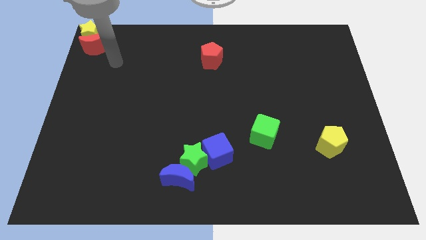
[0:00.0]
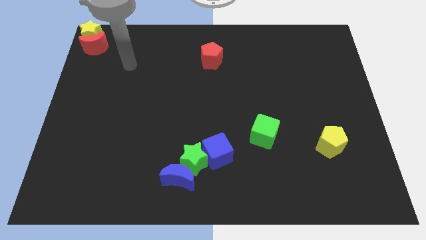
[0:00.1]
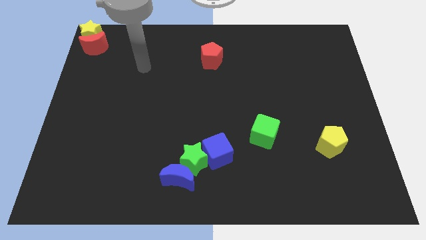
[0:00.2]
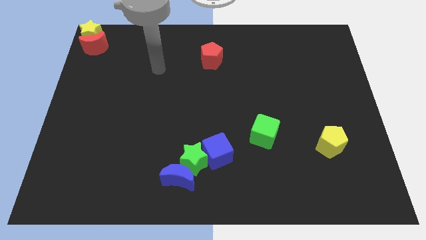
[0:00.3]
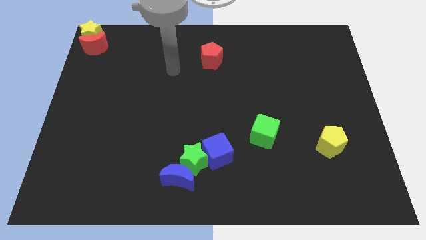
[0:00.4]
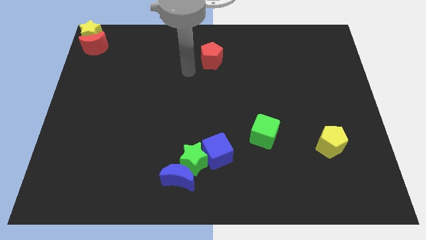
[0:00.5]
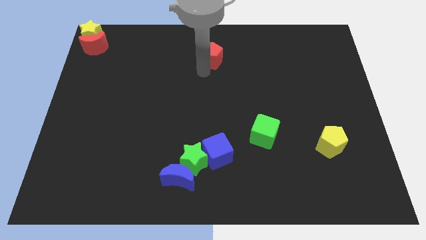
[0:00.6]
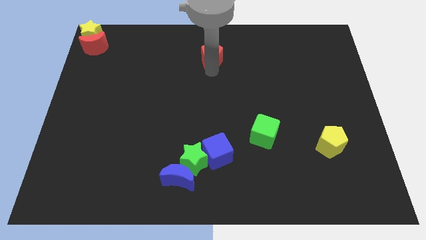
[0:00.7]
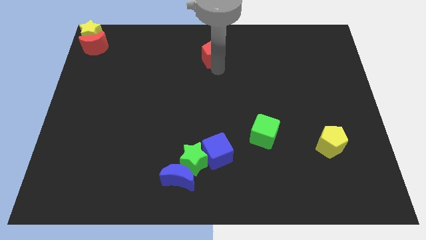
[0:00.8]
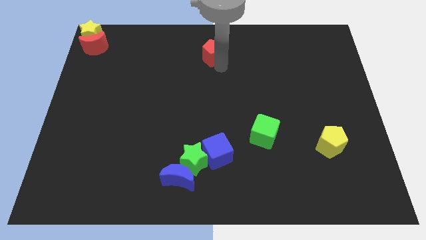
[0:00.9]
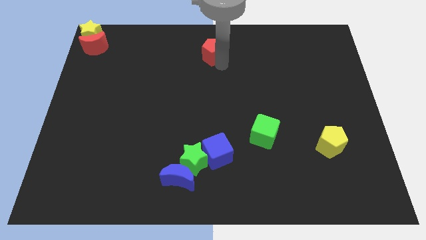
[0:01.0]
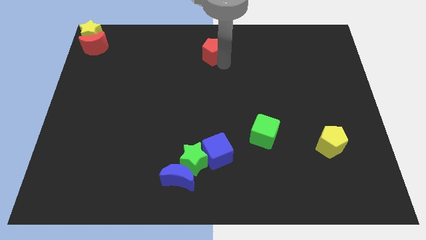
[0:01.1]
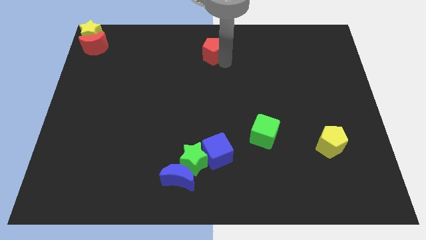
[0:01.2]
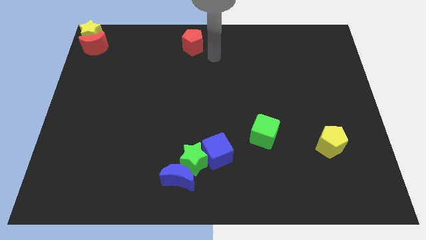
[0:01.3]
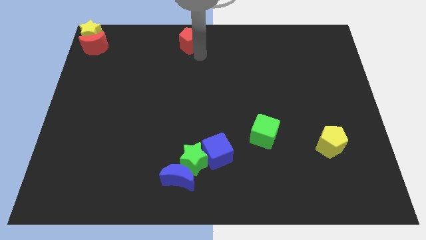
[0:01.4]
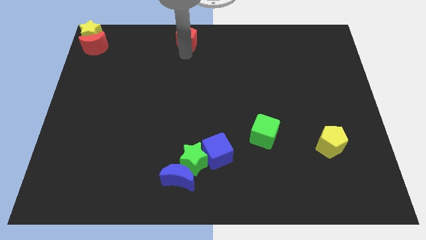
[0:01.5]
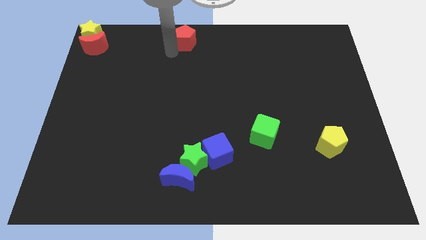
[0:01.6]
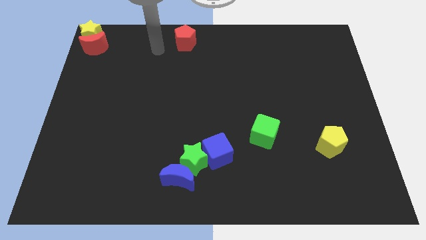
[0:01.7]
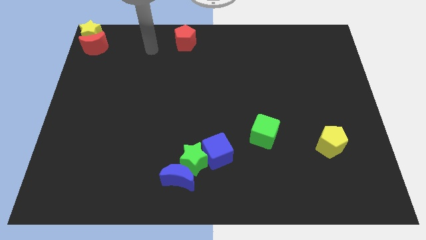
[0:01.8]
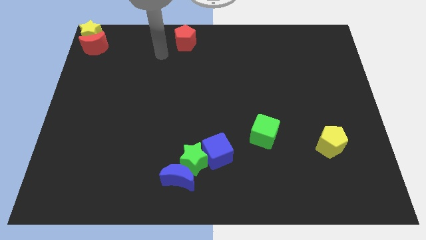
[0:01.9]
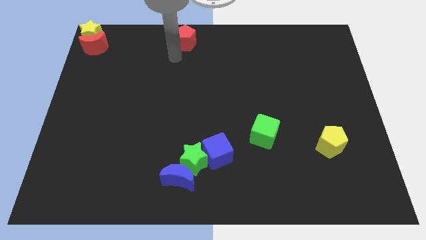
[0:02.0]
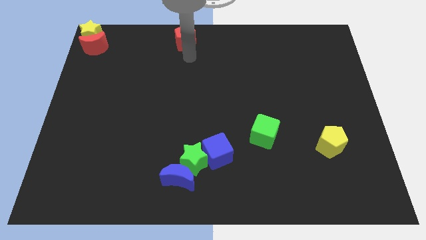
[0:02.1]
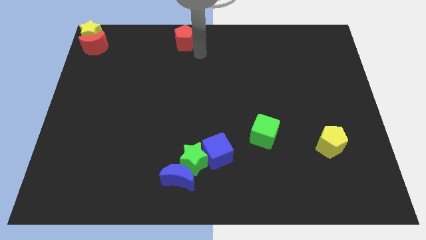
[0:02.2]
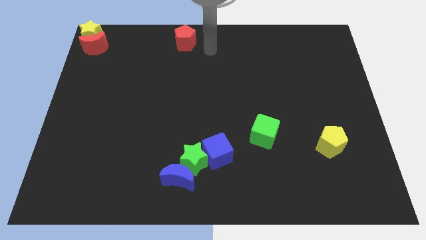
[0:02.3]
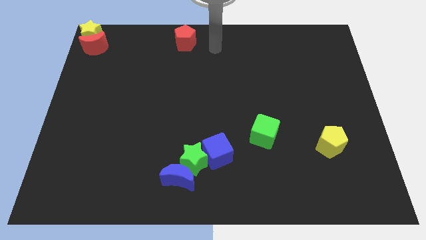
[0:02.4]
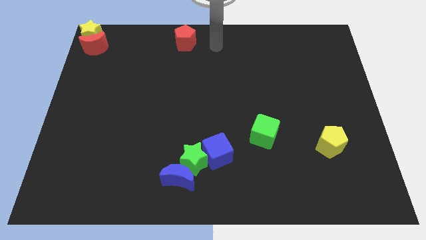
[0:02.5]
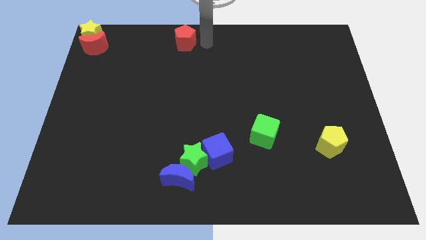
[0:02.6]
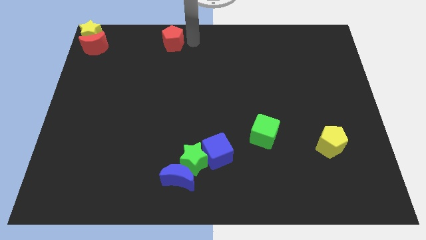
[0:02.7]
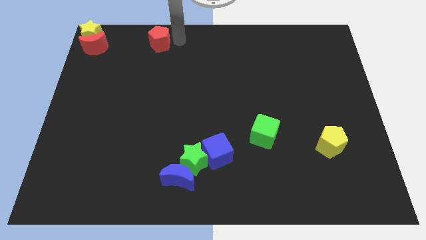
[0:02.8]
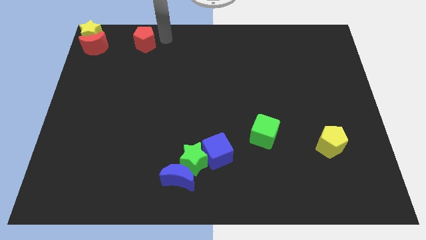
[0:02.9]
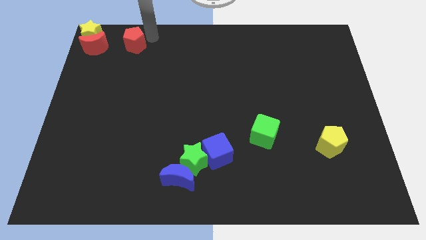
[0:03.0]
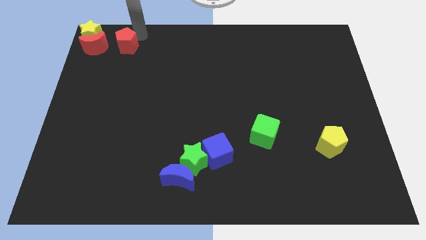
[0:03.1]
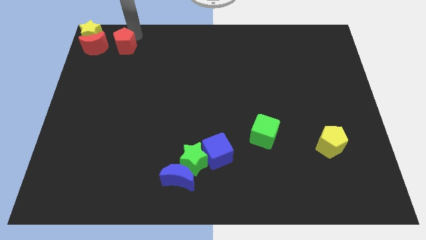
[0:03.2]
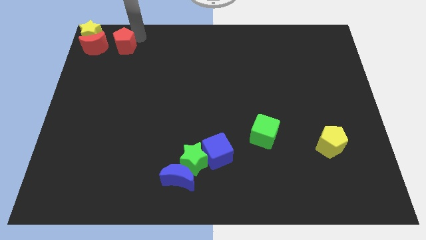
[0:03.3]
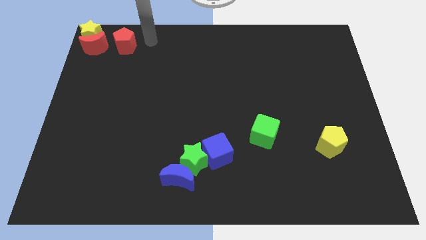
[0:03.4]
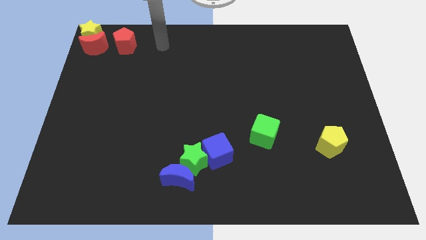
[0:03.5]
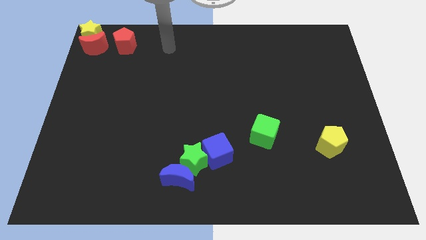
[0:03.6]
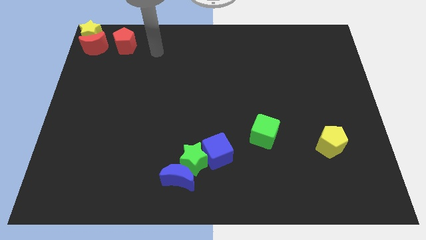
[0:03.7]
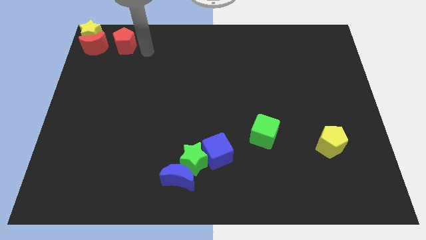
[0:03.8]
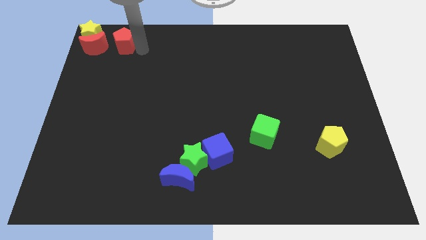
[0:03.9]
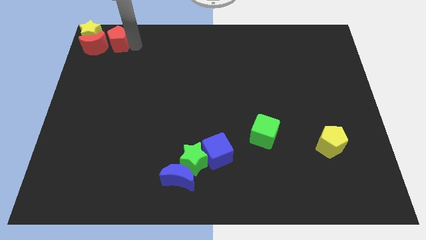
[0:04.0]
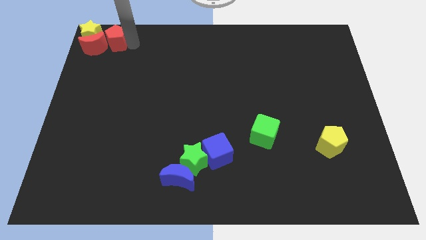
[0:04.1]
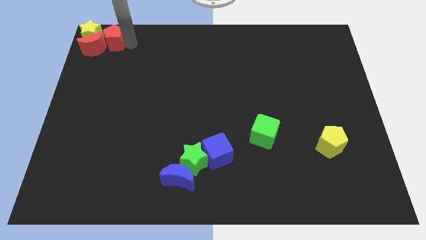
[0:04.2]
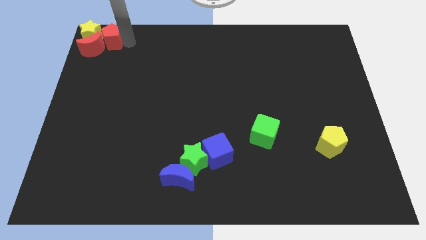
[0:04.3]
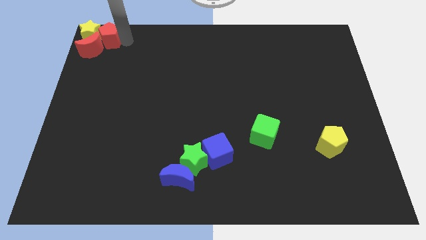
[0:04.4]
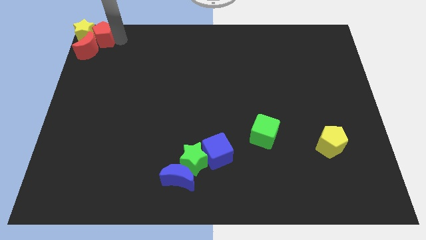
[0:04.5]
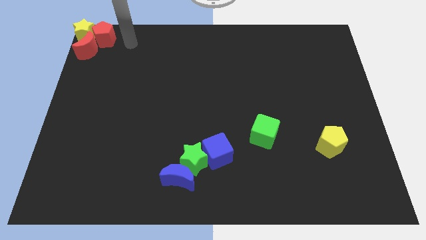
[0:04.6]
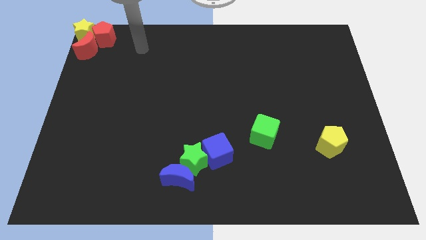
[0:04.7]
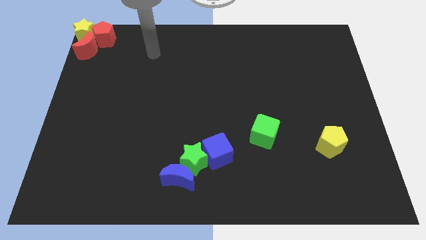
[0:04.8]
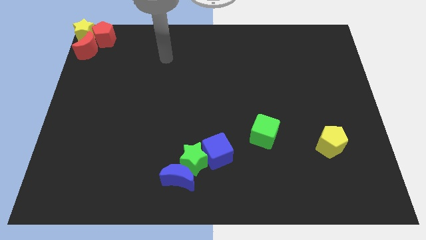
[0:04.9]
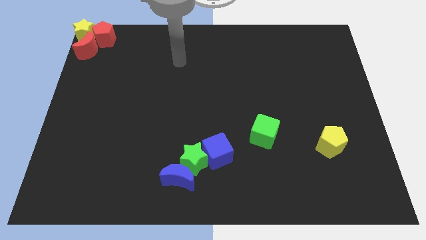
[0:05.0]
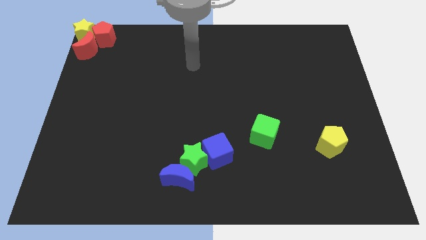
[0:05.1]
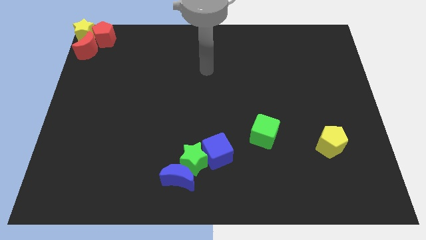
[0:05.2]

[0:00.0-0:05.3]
push the red pentagon into the yellow star and red moon

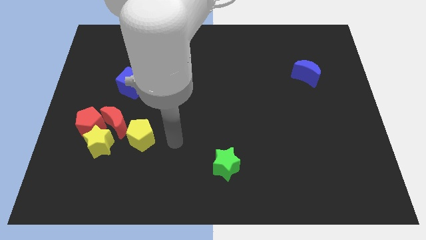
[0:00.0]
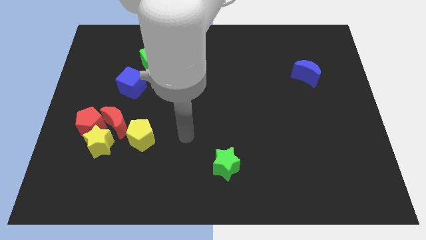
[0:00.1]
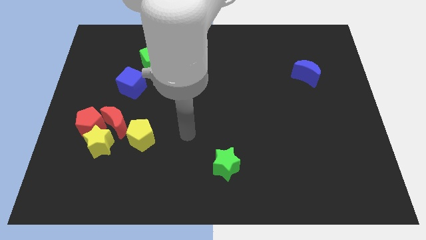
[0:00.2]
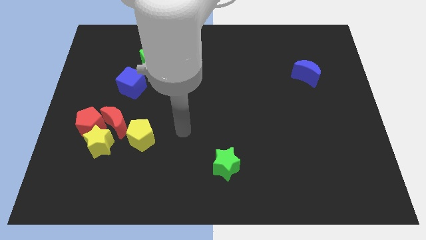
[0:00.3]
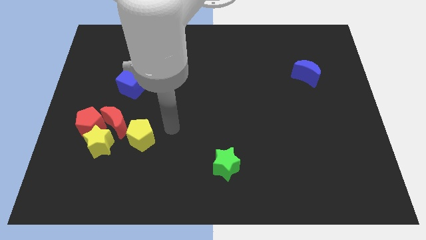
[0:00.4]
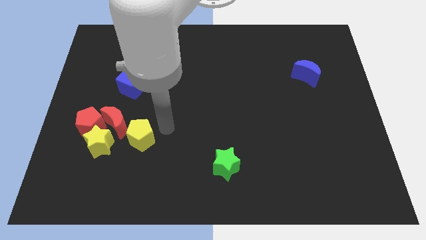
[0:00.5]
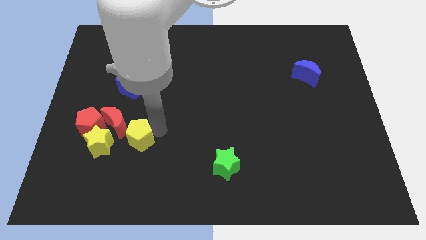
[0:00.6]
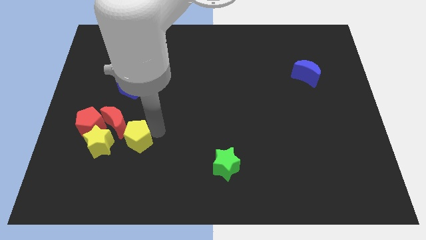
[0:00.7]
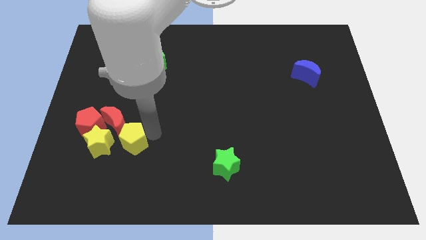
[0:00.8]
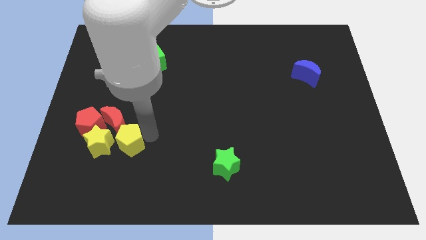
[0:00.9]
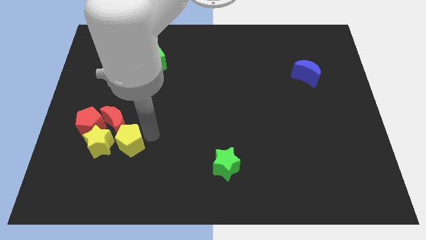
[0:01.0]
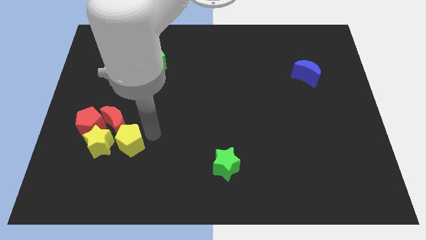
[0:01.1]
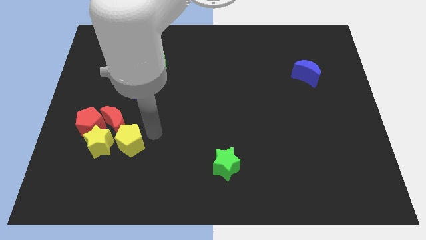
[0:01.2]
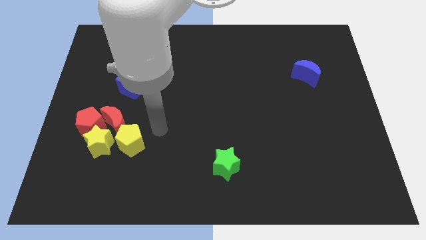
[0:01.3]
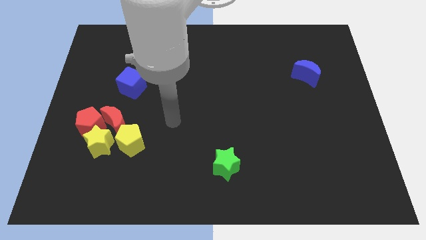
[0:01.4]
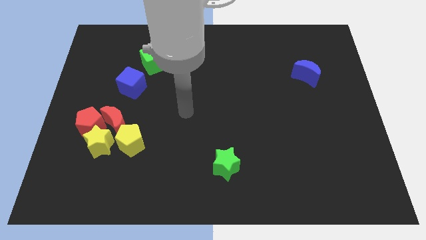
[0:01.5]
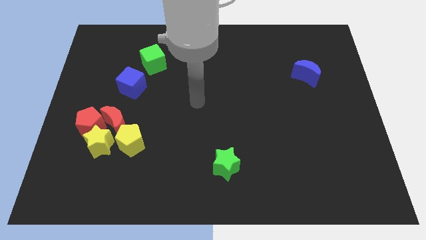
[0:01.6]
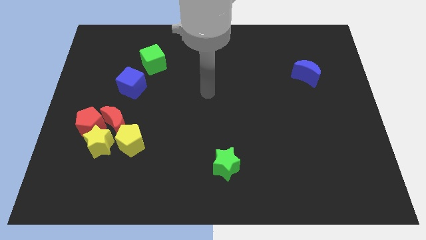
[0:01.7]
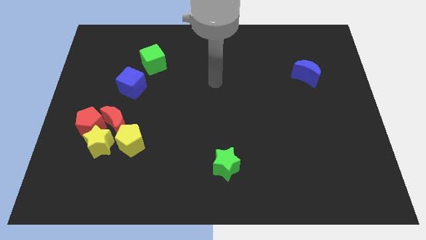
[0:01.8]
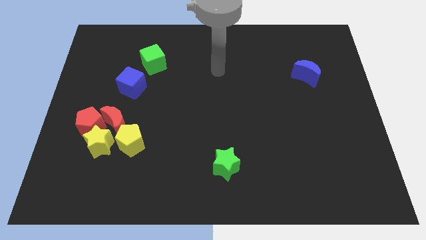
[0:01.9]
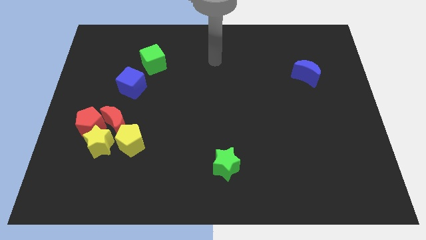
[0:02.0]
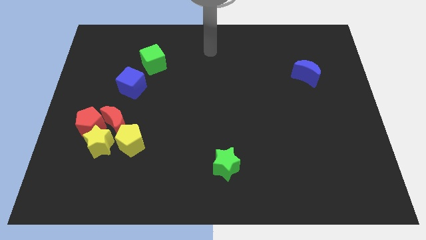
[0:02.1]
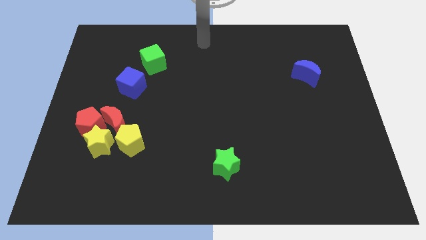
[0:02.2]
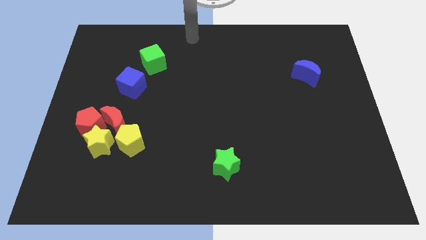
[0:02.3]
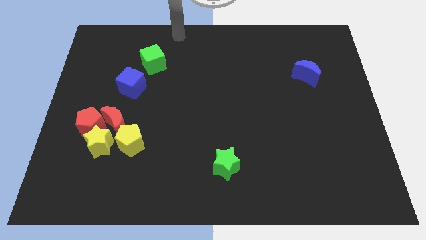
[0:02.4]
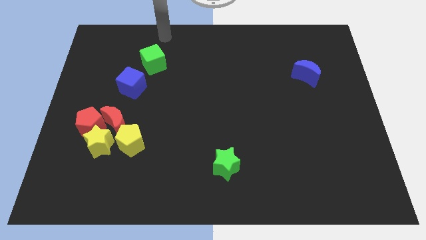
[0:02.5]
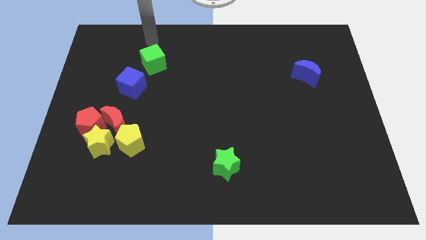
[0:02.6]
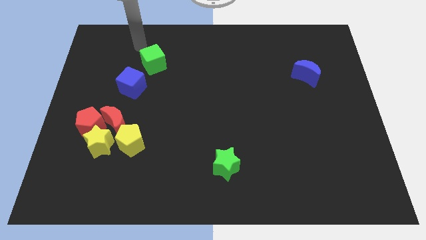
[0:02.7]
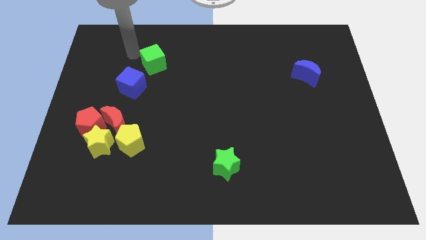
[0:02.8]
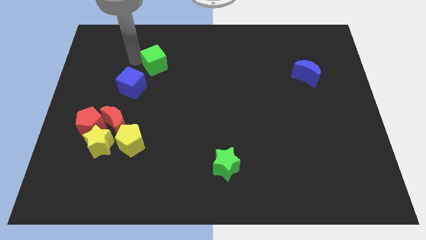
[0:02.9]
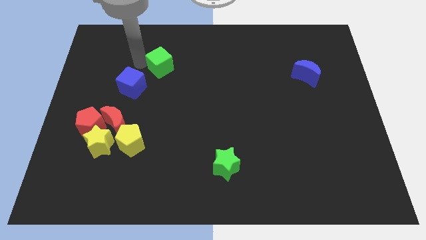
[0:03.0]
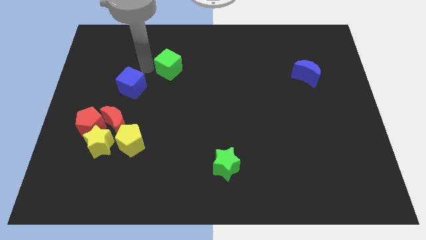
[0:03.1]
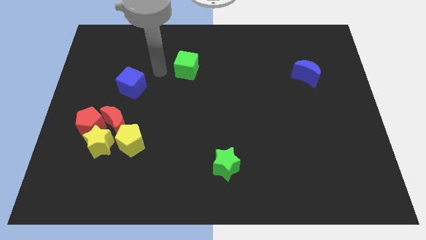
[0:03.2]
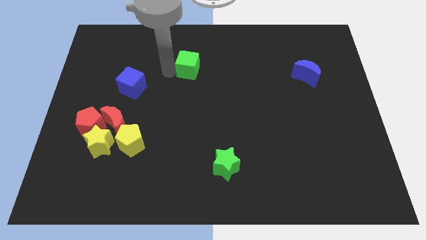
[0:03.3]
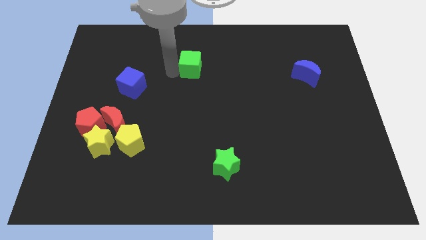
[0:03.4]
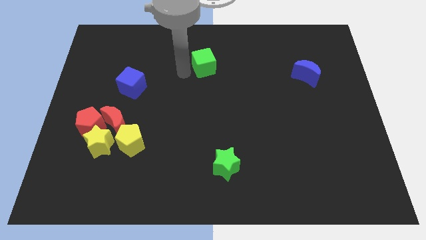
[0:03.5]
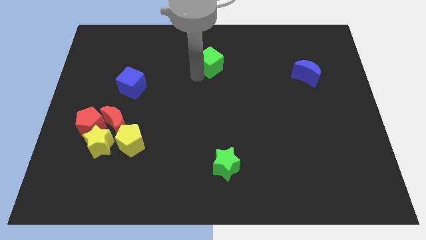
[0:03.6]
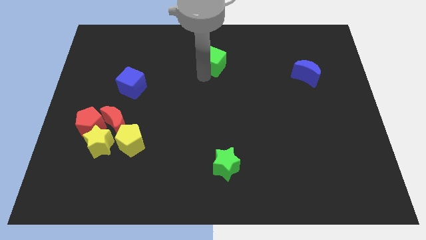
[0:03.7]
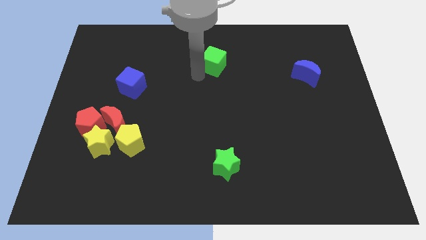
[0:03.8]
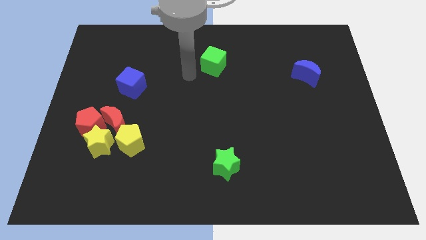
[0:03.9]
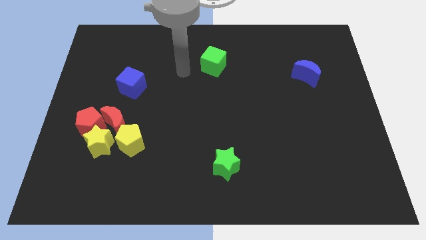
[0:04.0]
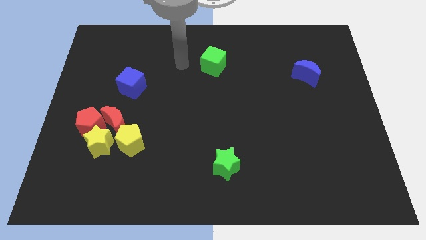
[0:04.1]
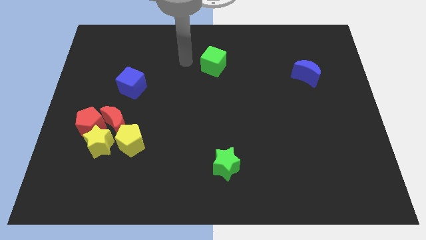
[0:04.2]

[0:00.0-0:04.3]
move the green cube parallel to the top of the green star
